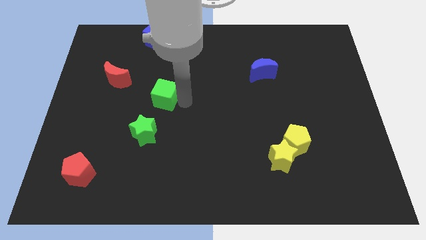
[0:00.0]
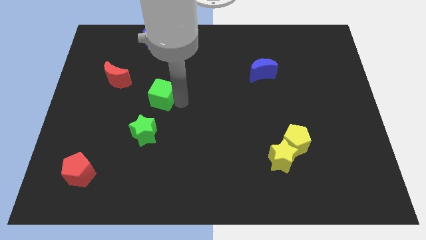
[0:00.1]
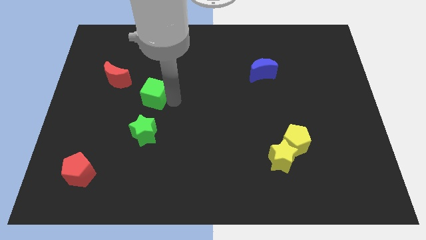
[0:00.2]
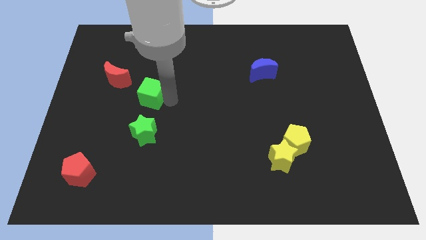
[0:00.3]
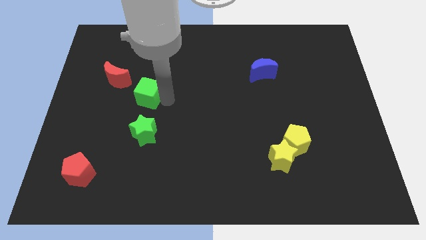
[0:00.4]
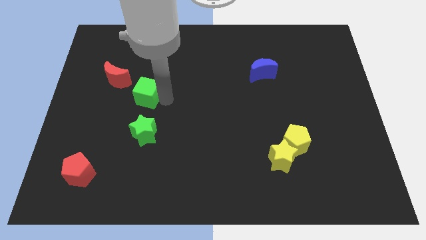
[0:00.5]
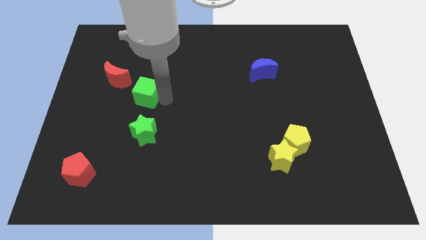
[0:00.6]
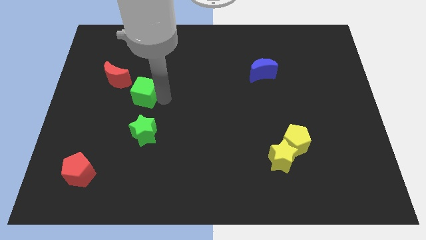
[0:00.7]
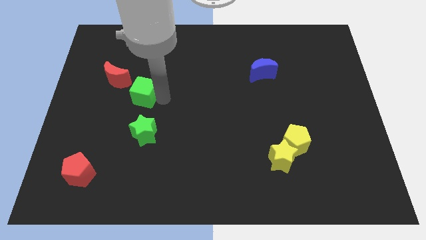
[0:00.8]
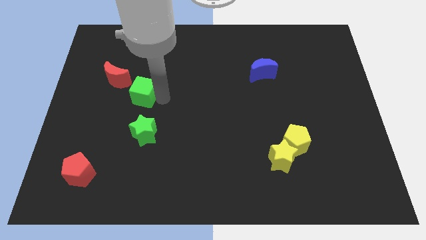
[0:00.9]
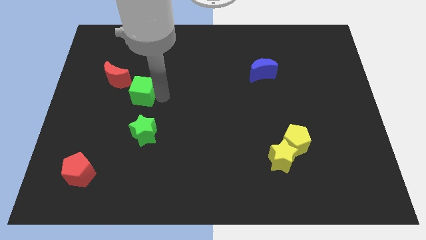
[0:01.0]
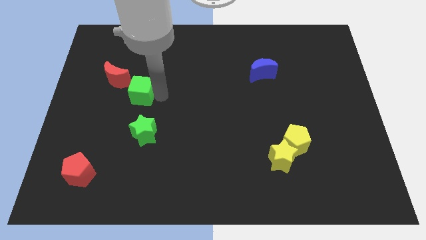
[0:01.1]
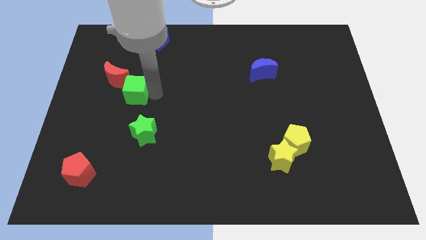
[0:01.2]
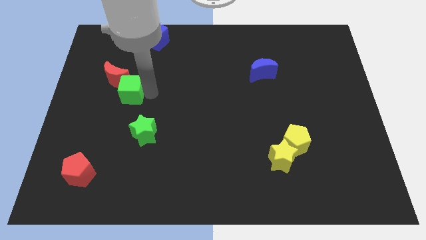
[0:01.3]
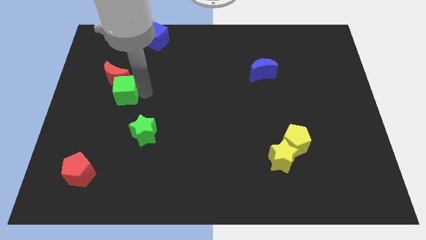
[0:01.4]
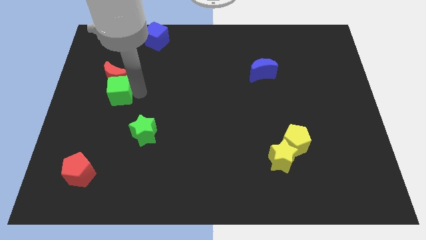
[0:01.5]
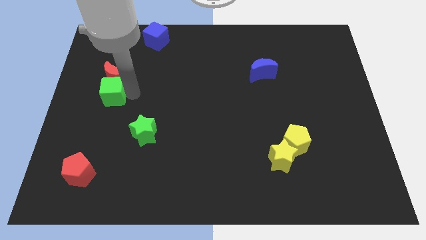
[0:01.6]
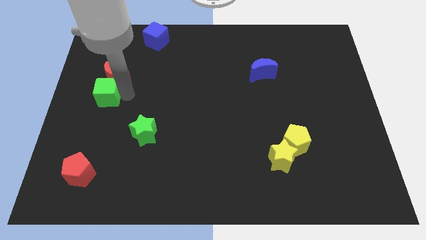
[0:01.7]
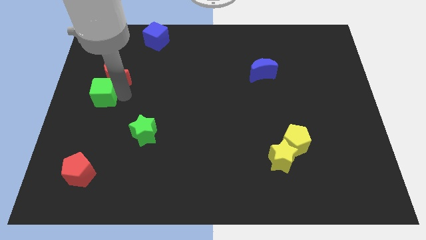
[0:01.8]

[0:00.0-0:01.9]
place green cube to the bottom of red moon

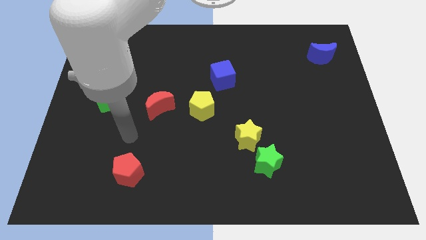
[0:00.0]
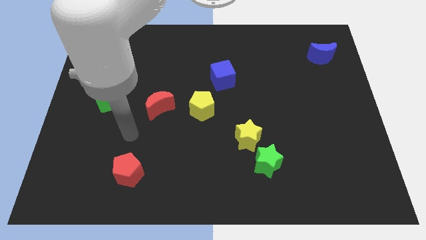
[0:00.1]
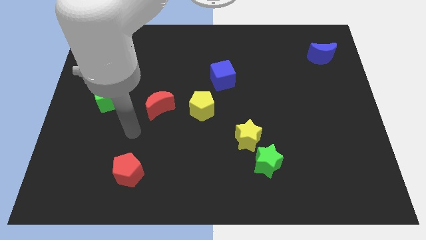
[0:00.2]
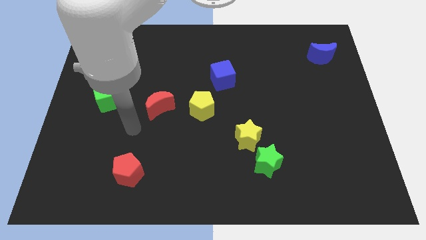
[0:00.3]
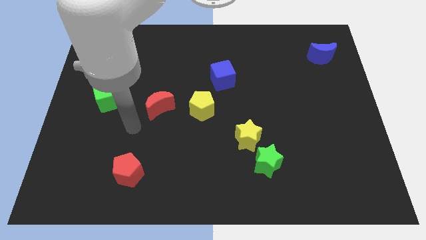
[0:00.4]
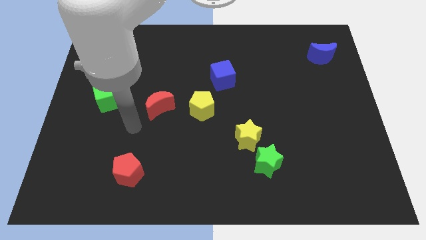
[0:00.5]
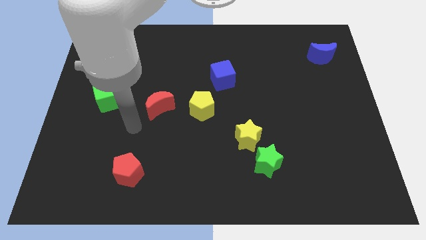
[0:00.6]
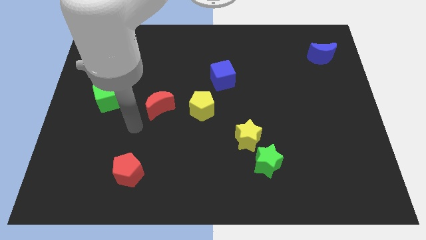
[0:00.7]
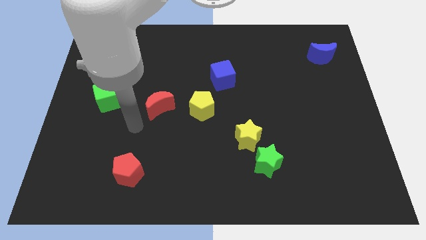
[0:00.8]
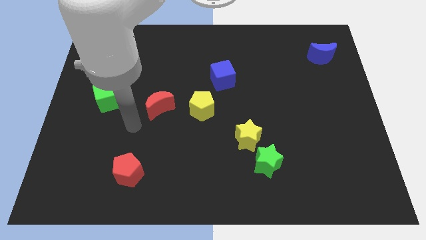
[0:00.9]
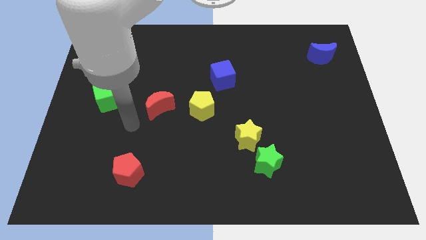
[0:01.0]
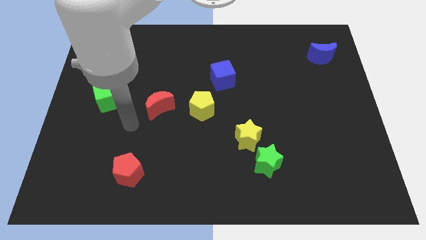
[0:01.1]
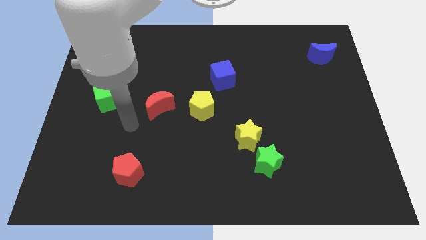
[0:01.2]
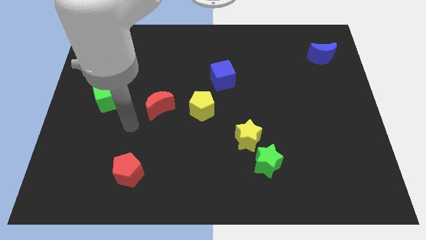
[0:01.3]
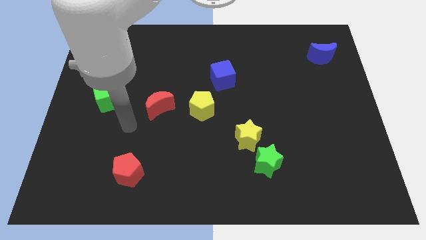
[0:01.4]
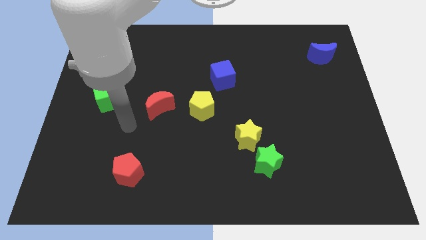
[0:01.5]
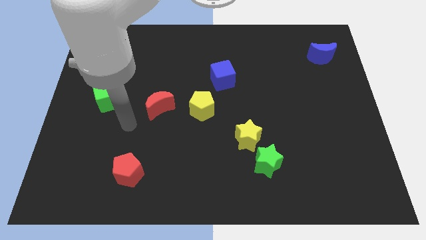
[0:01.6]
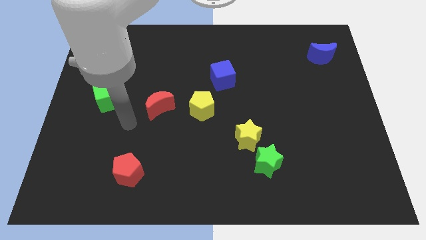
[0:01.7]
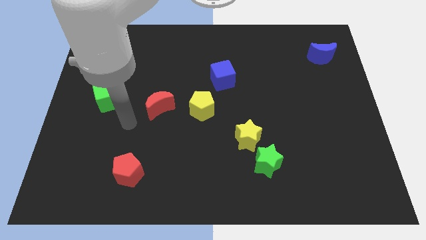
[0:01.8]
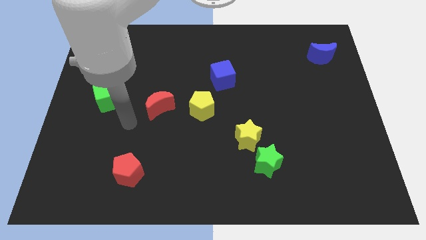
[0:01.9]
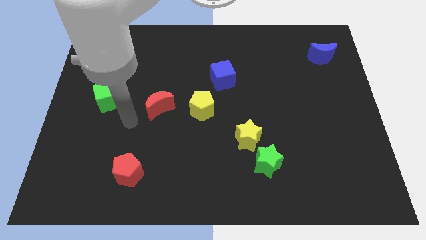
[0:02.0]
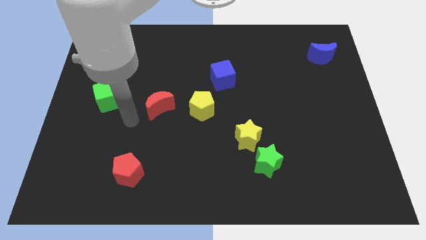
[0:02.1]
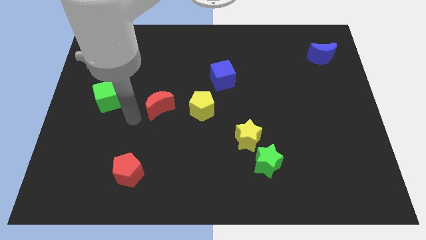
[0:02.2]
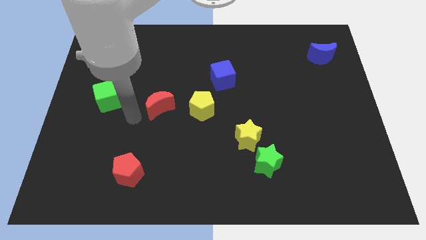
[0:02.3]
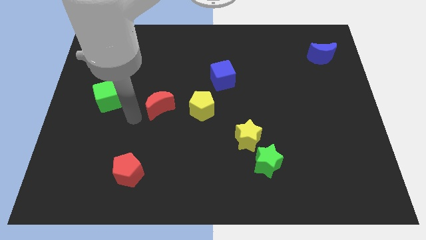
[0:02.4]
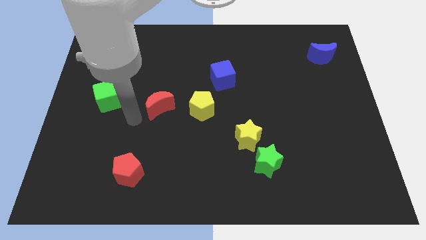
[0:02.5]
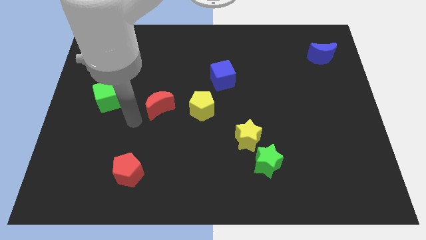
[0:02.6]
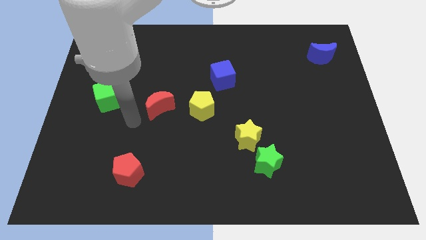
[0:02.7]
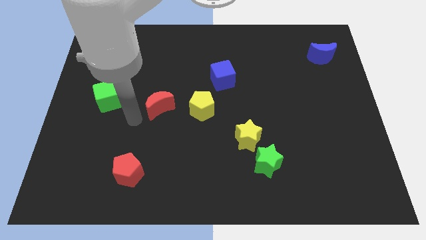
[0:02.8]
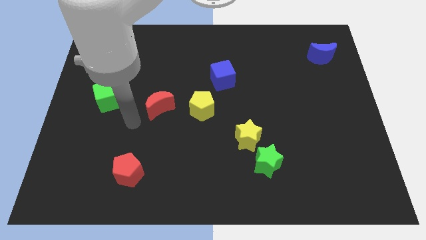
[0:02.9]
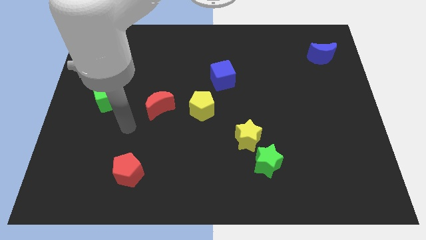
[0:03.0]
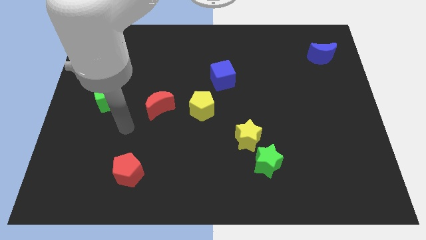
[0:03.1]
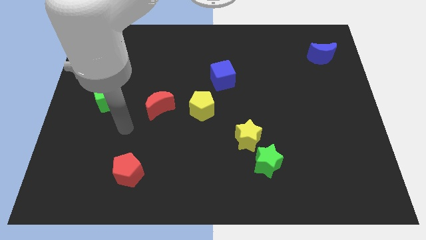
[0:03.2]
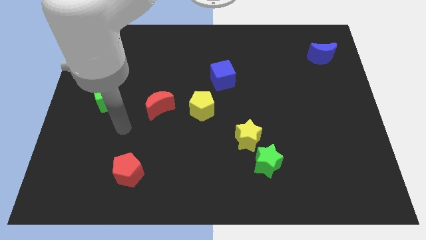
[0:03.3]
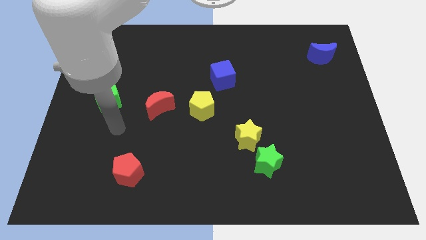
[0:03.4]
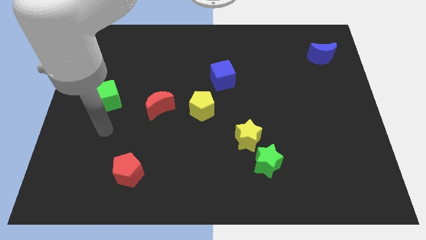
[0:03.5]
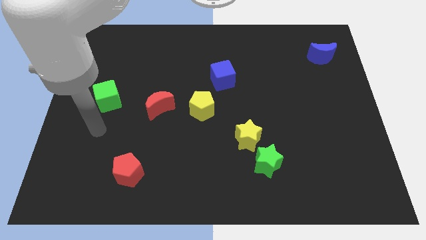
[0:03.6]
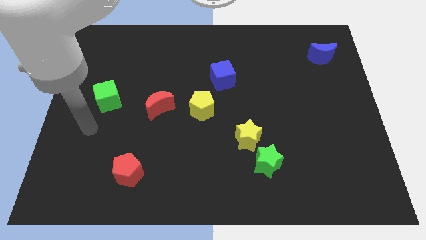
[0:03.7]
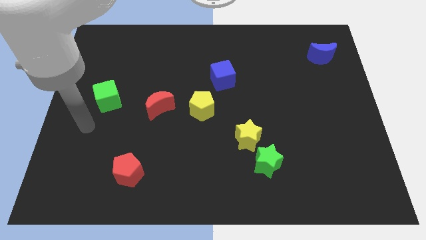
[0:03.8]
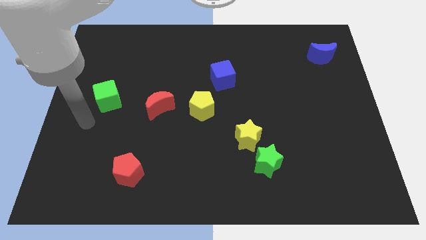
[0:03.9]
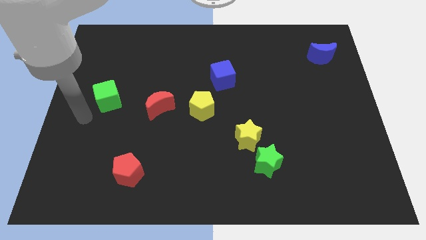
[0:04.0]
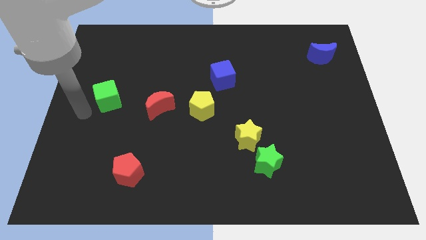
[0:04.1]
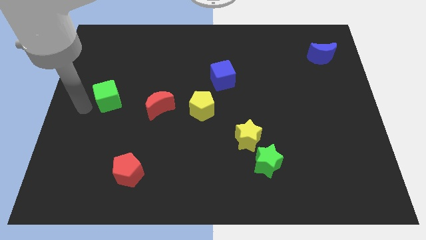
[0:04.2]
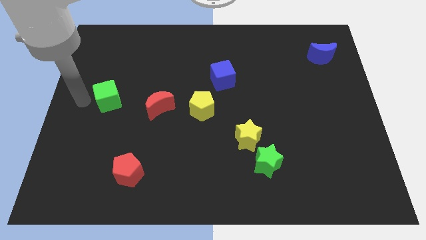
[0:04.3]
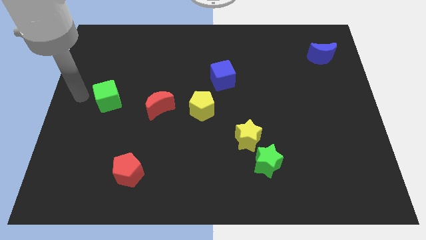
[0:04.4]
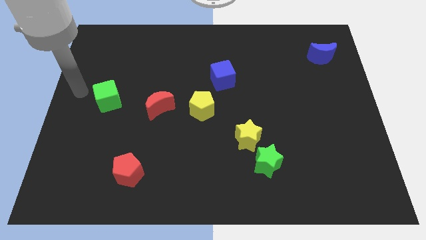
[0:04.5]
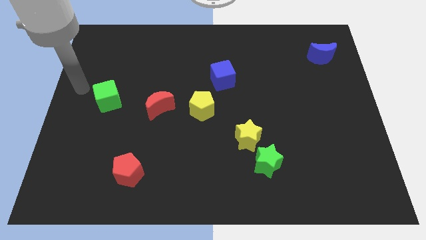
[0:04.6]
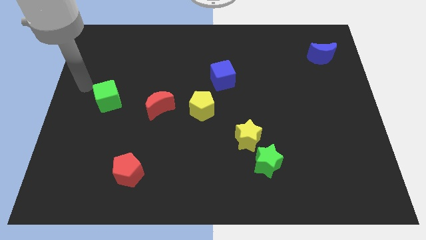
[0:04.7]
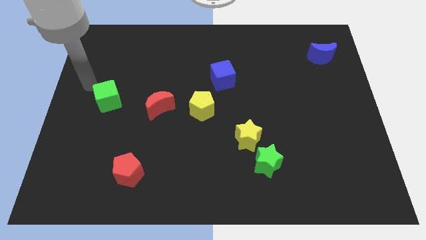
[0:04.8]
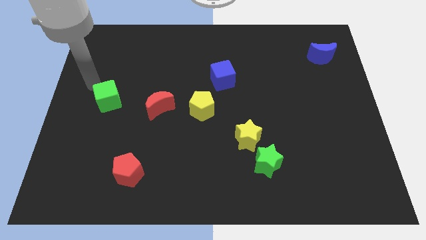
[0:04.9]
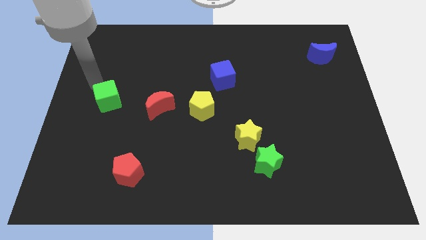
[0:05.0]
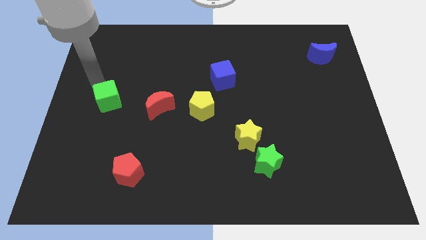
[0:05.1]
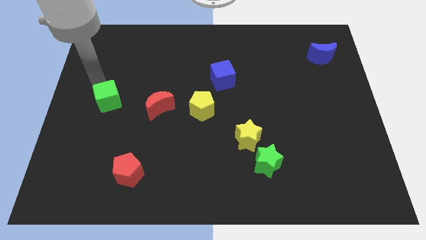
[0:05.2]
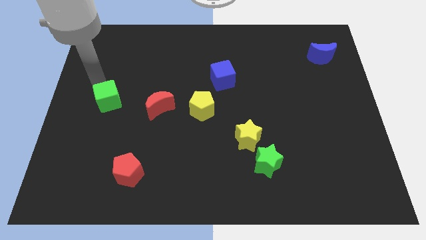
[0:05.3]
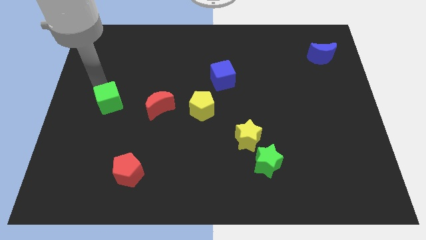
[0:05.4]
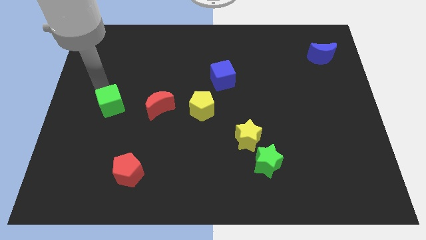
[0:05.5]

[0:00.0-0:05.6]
slightly push the green cube to the bottom of the board

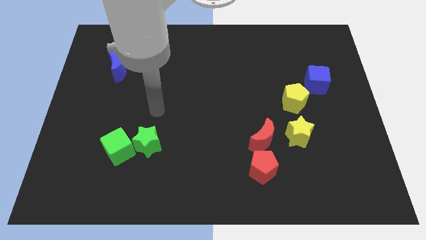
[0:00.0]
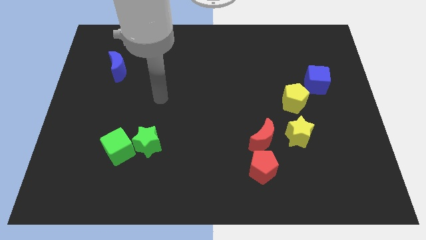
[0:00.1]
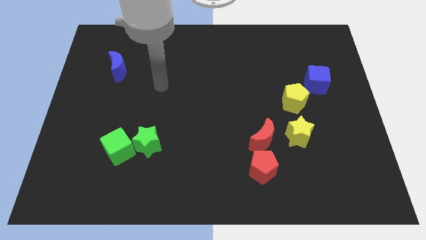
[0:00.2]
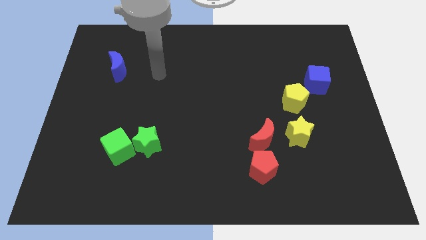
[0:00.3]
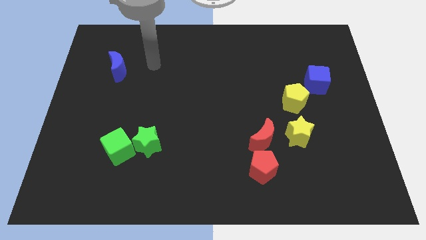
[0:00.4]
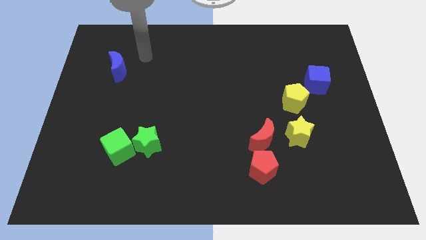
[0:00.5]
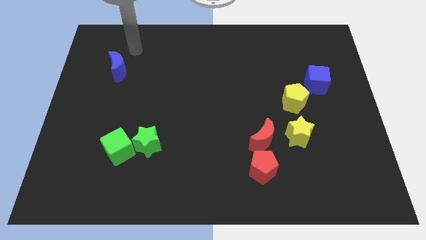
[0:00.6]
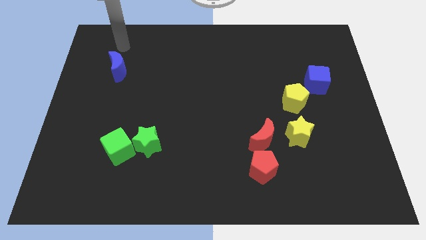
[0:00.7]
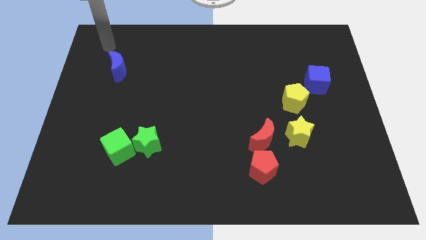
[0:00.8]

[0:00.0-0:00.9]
place your hand above the blue crescent

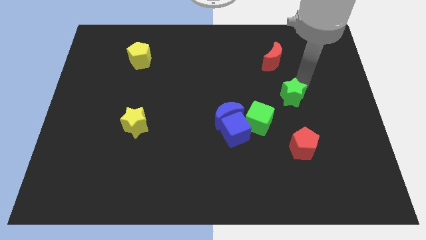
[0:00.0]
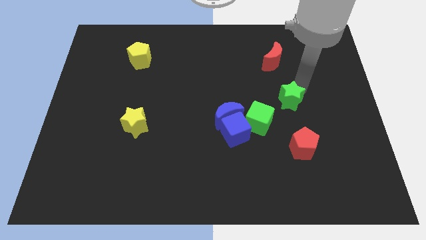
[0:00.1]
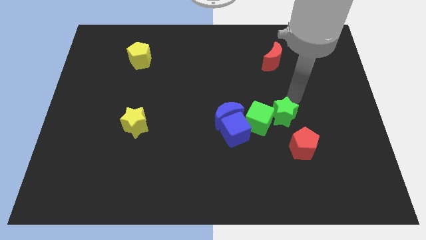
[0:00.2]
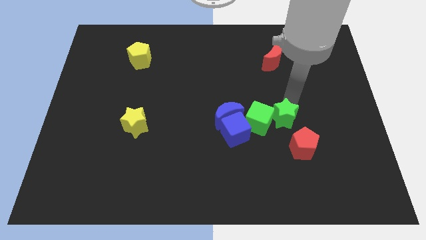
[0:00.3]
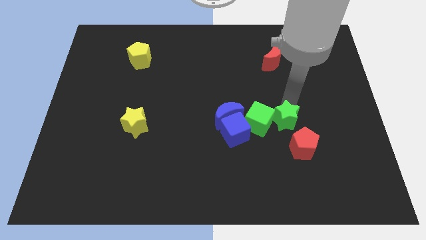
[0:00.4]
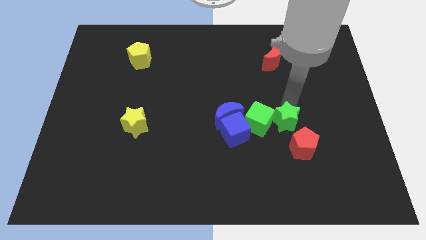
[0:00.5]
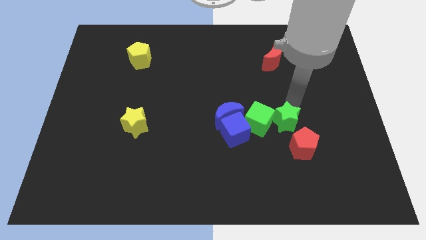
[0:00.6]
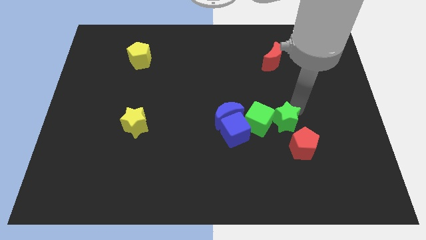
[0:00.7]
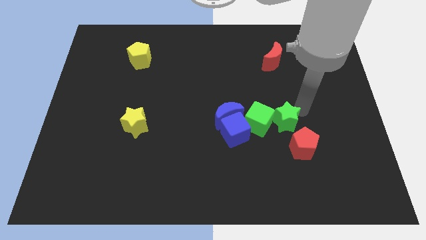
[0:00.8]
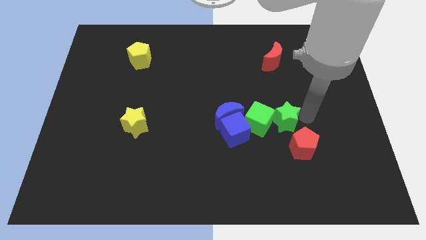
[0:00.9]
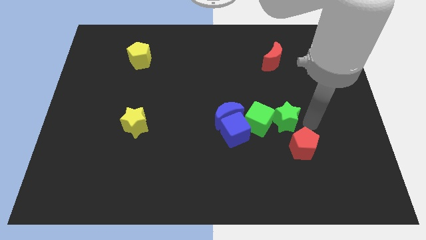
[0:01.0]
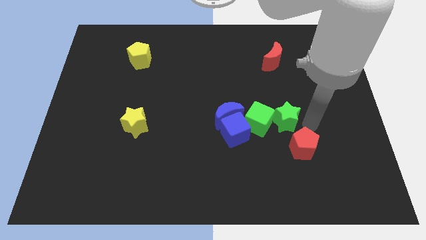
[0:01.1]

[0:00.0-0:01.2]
place the green star to the right side of the green cube
